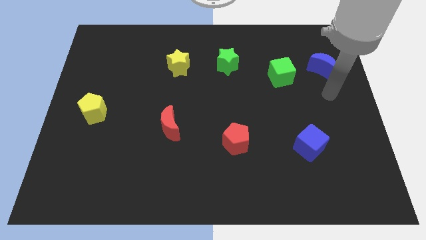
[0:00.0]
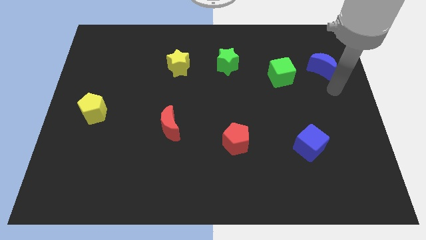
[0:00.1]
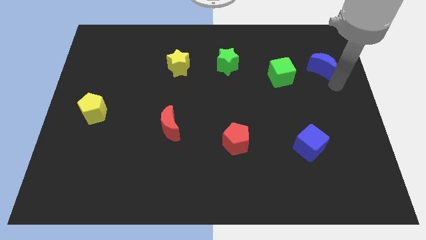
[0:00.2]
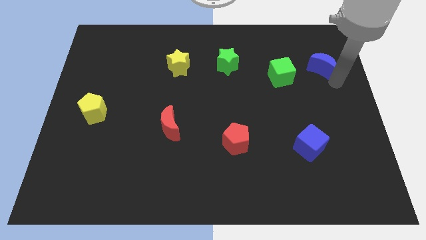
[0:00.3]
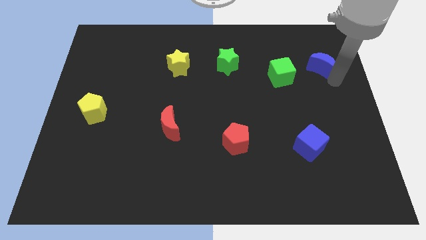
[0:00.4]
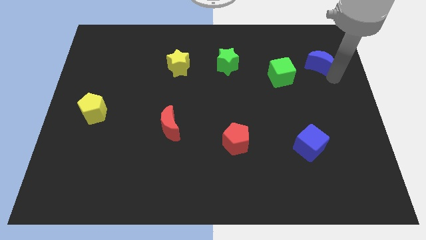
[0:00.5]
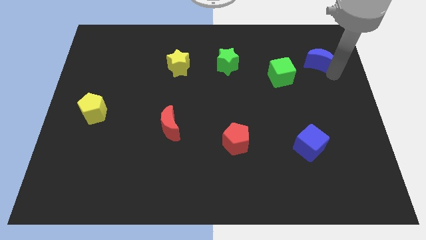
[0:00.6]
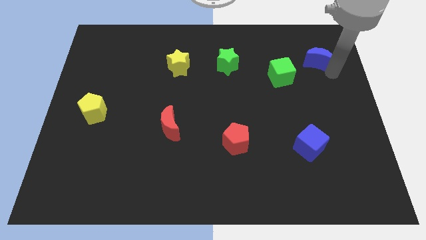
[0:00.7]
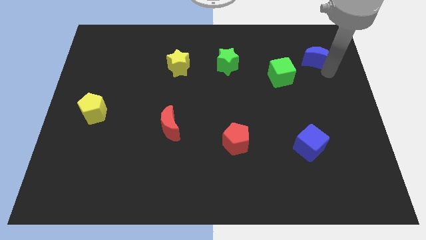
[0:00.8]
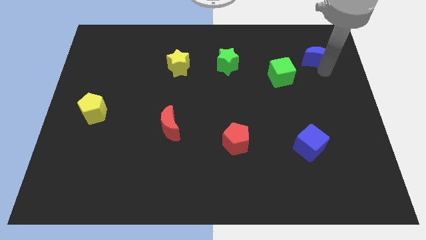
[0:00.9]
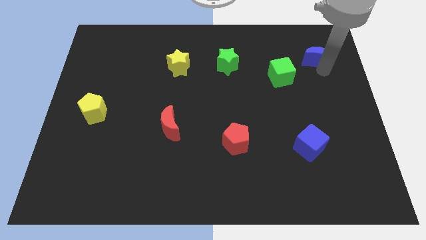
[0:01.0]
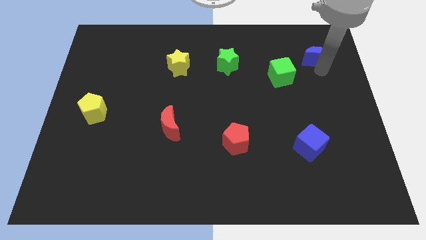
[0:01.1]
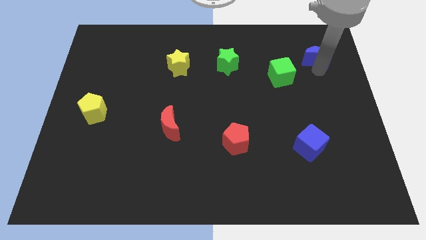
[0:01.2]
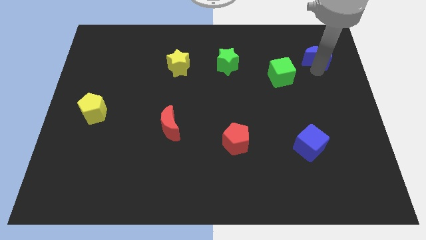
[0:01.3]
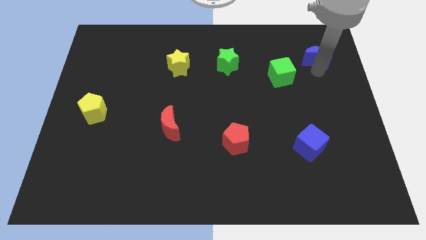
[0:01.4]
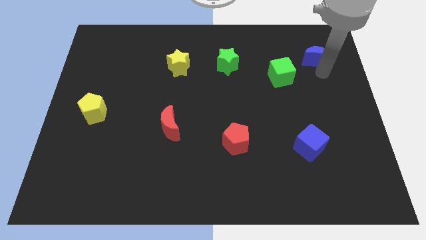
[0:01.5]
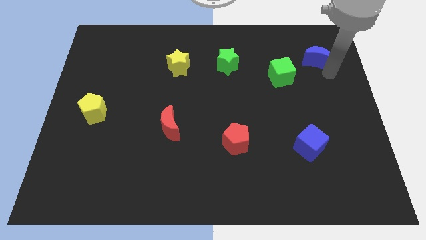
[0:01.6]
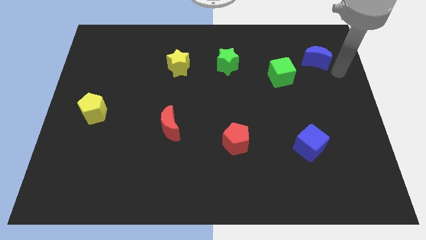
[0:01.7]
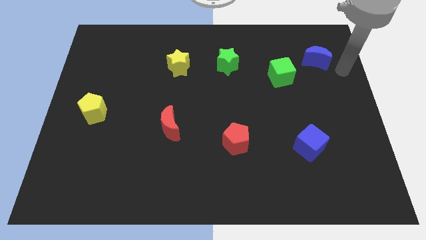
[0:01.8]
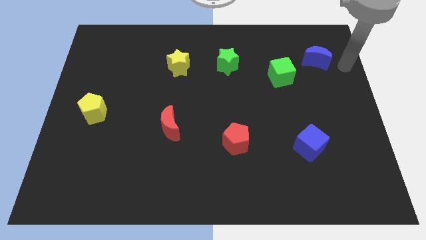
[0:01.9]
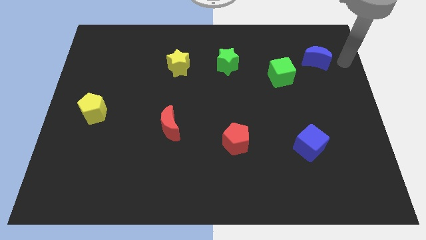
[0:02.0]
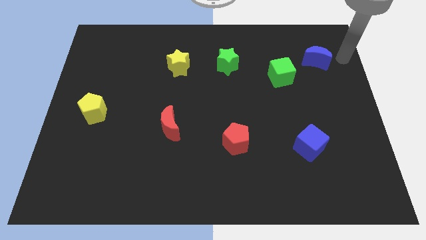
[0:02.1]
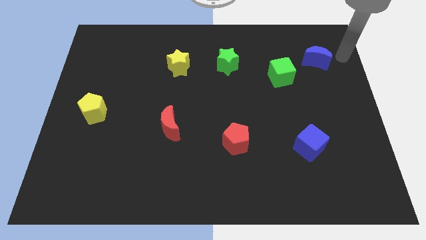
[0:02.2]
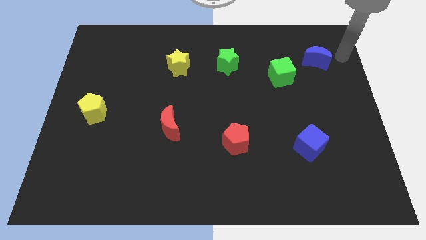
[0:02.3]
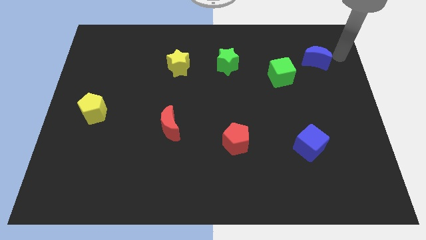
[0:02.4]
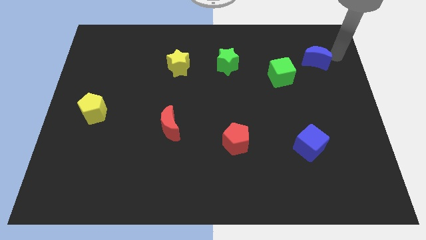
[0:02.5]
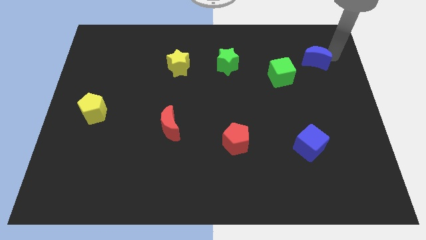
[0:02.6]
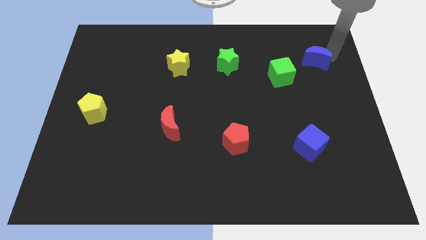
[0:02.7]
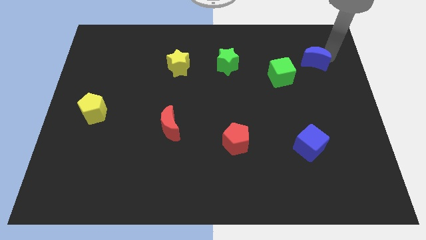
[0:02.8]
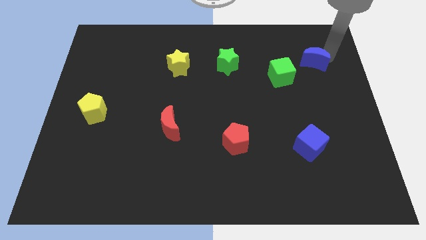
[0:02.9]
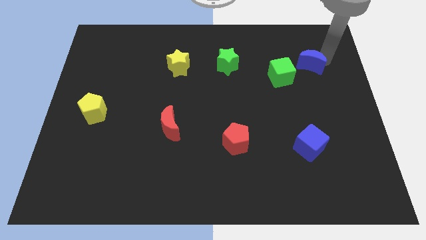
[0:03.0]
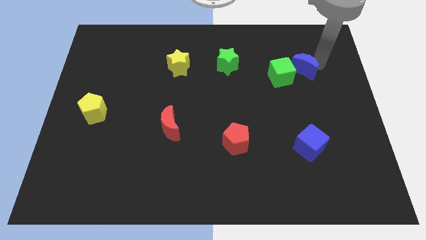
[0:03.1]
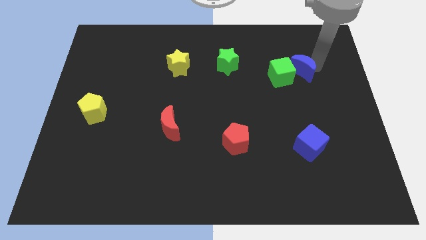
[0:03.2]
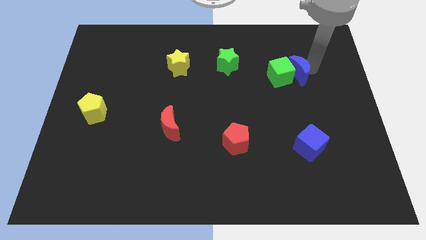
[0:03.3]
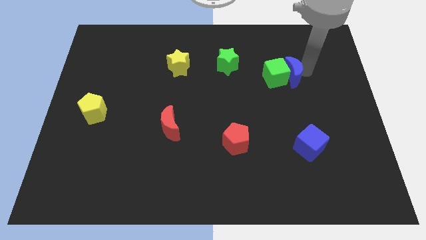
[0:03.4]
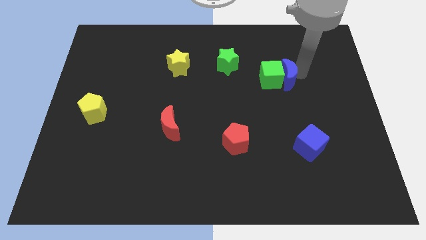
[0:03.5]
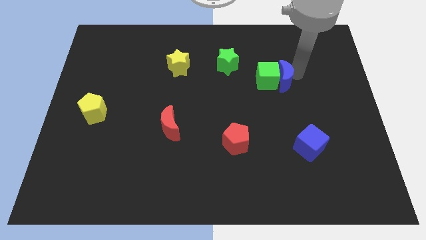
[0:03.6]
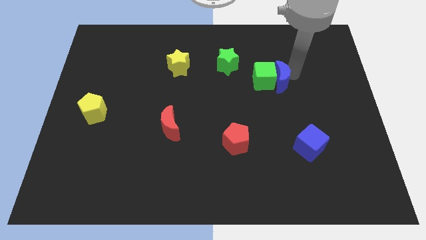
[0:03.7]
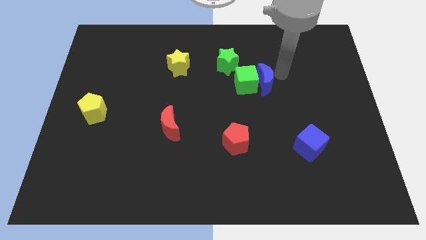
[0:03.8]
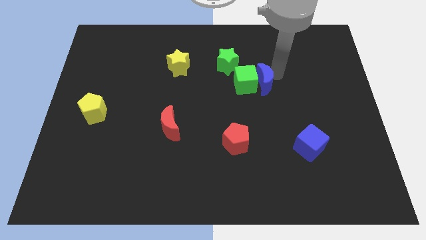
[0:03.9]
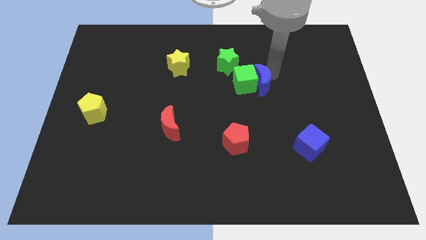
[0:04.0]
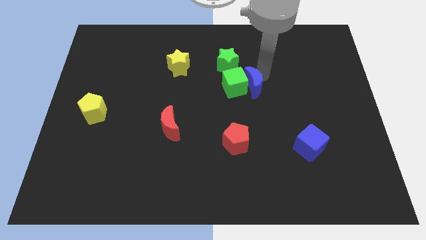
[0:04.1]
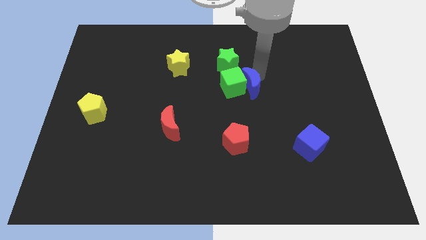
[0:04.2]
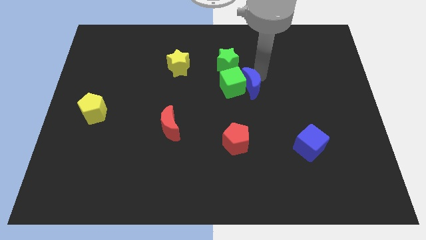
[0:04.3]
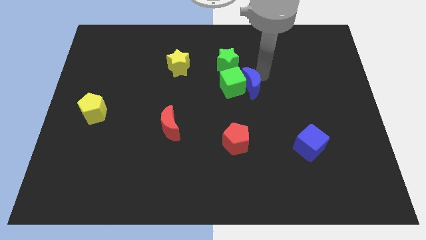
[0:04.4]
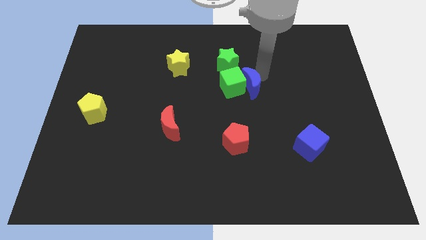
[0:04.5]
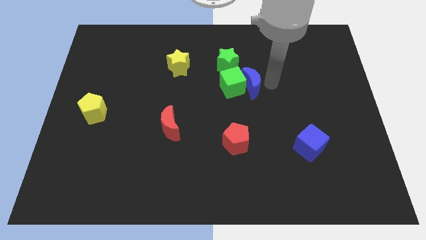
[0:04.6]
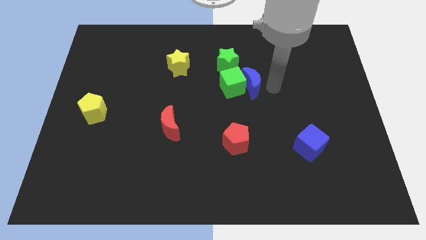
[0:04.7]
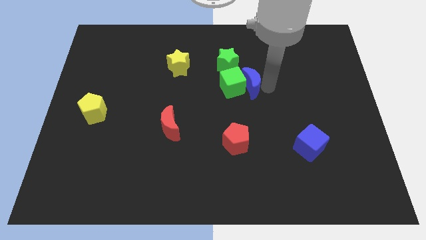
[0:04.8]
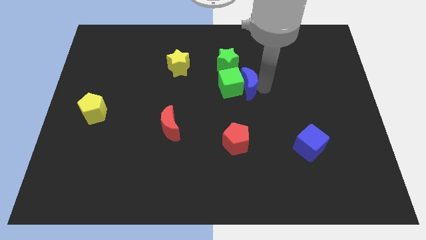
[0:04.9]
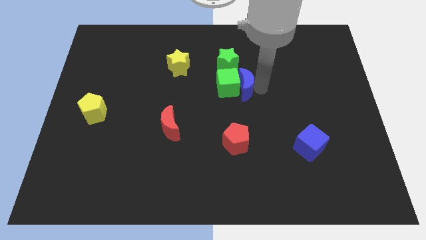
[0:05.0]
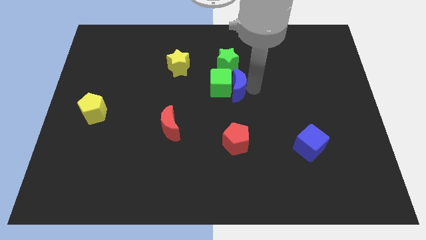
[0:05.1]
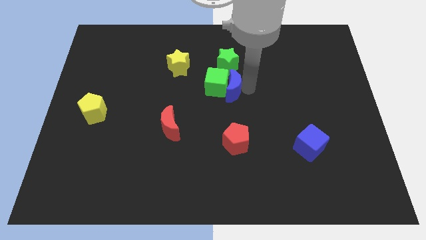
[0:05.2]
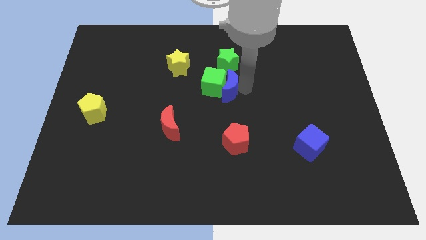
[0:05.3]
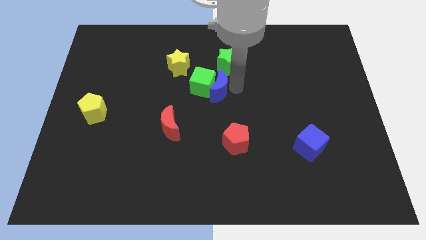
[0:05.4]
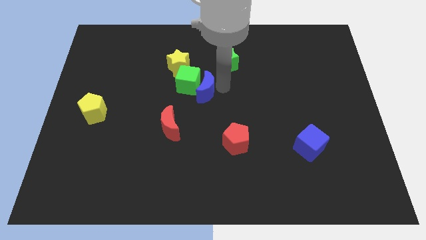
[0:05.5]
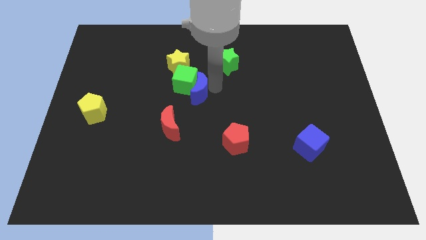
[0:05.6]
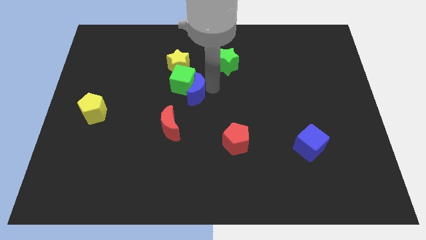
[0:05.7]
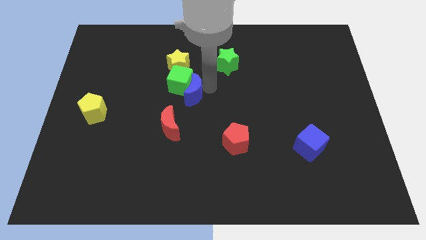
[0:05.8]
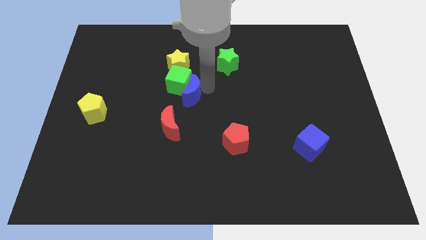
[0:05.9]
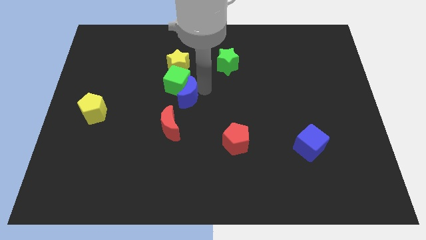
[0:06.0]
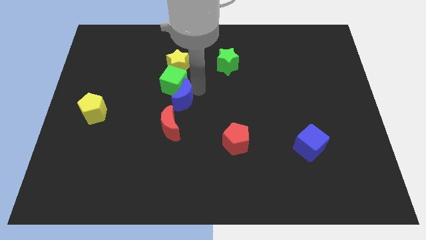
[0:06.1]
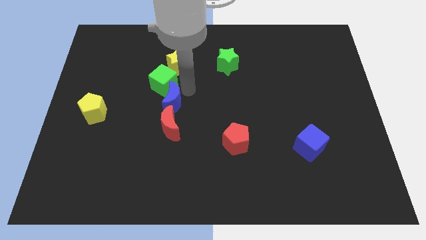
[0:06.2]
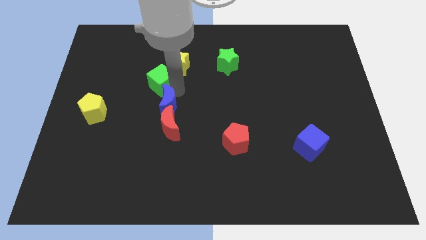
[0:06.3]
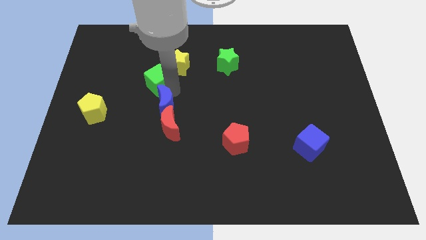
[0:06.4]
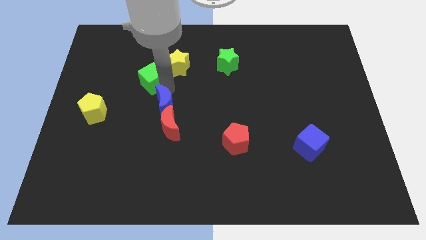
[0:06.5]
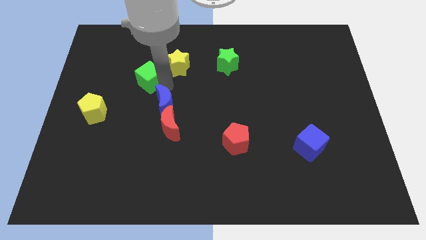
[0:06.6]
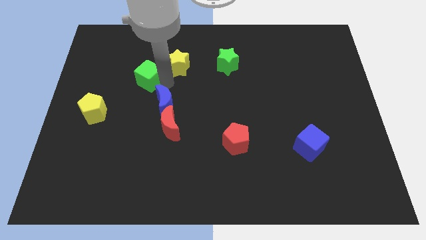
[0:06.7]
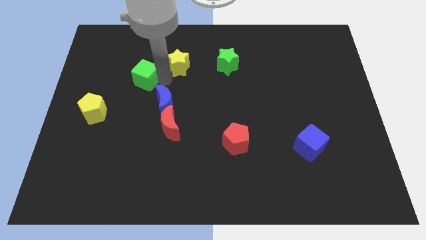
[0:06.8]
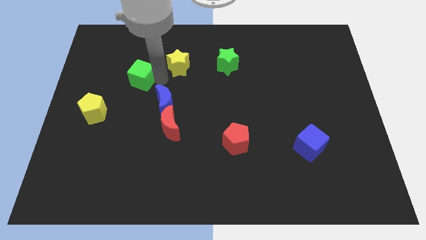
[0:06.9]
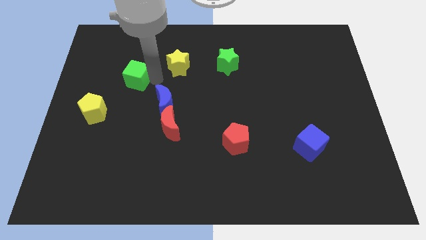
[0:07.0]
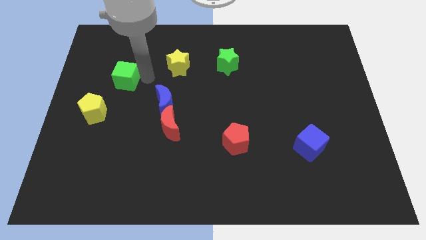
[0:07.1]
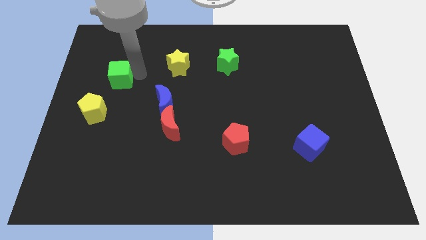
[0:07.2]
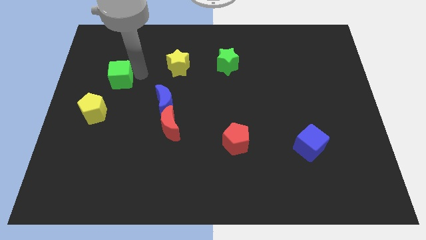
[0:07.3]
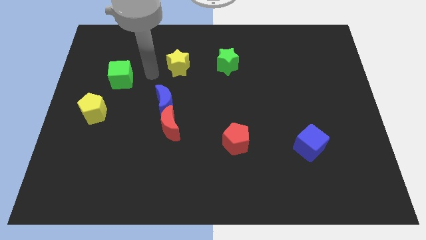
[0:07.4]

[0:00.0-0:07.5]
move the green cube towards the left side of the board

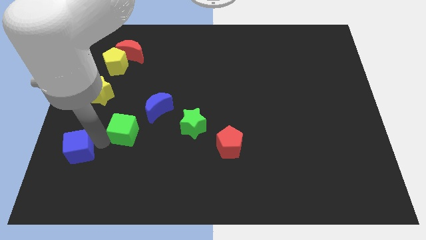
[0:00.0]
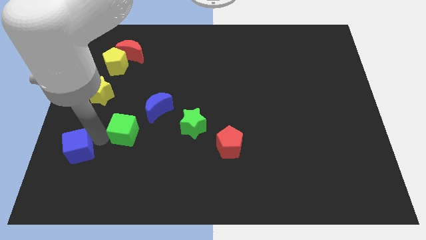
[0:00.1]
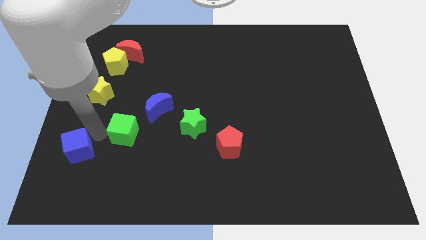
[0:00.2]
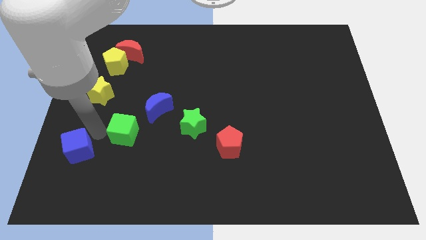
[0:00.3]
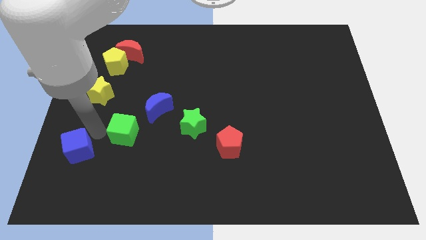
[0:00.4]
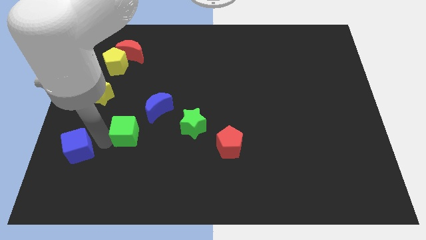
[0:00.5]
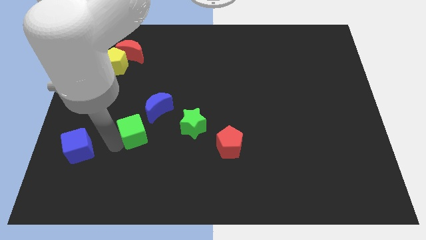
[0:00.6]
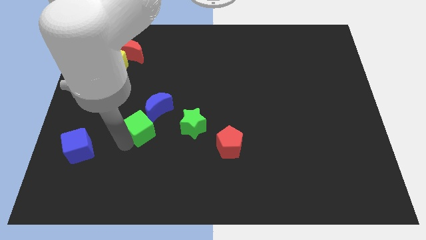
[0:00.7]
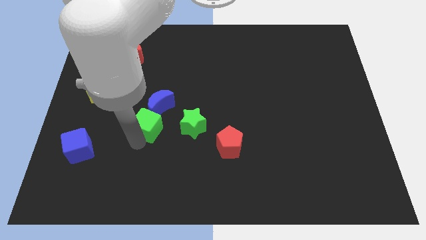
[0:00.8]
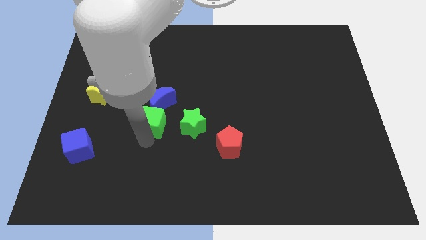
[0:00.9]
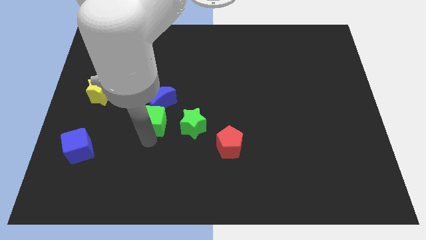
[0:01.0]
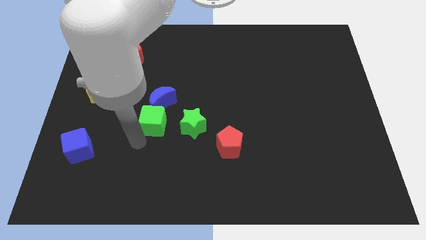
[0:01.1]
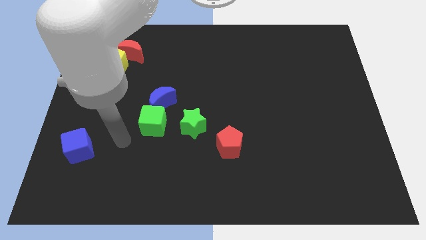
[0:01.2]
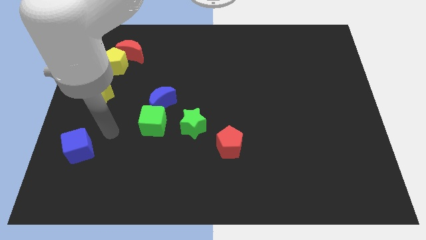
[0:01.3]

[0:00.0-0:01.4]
push the green cube into the blue moon
